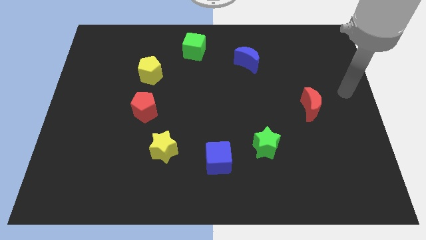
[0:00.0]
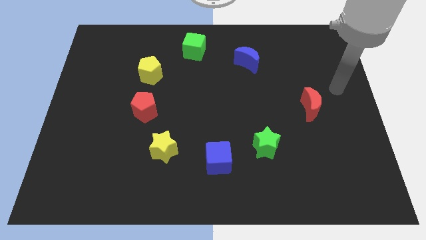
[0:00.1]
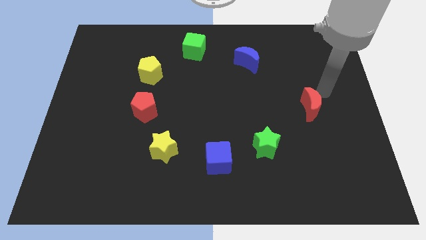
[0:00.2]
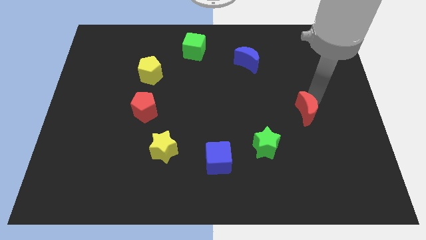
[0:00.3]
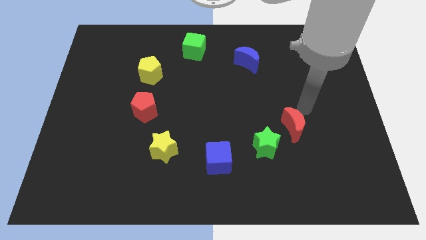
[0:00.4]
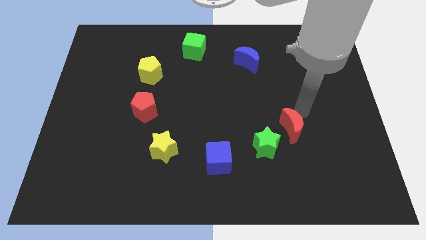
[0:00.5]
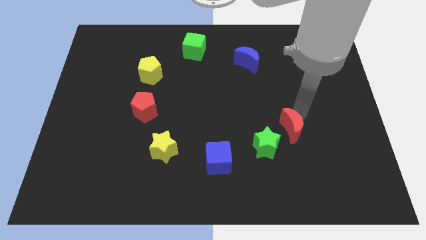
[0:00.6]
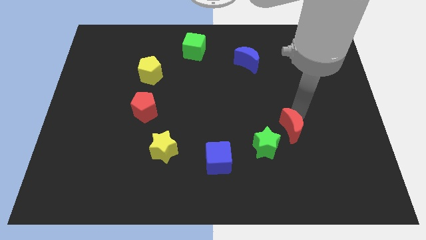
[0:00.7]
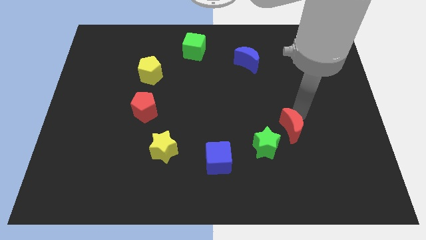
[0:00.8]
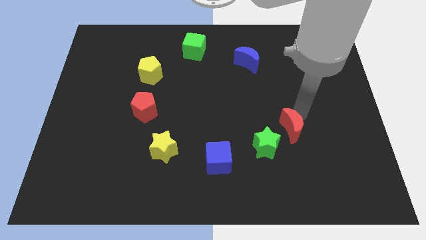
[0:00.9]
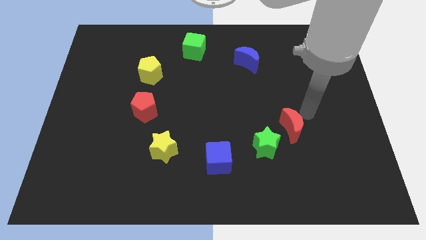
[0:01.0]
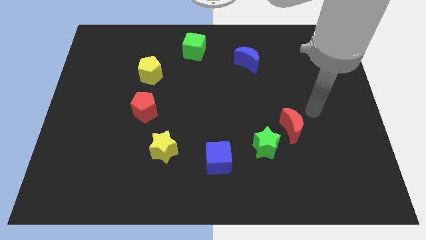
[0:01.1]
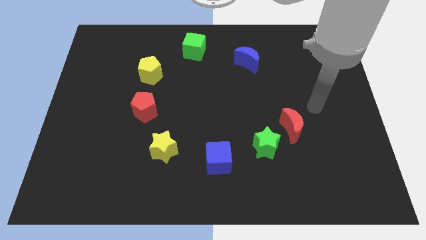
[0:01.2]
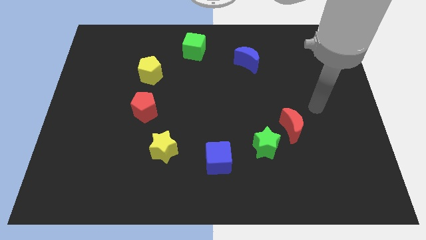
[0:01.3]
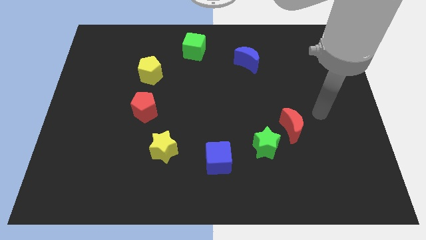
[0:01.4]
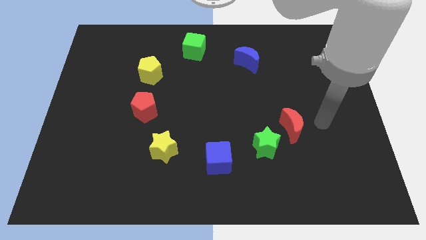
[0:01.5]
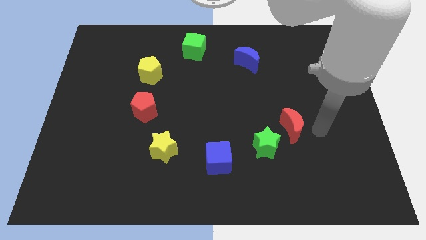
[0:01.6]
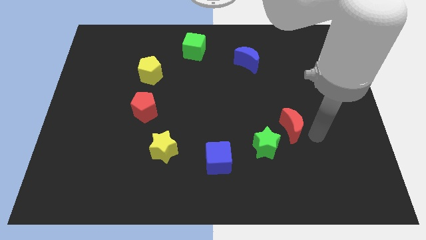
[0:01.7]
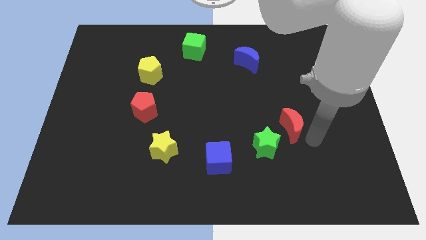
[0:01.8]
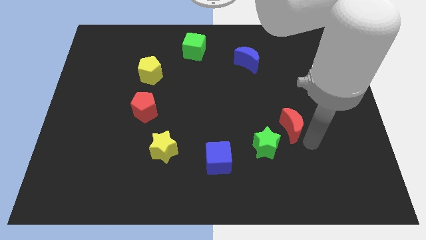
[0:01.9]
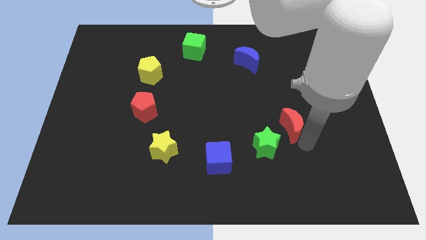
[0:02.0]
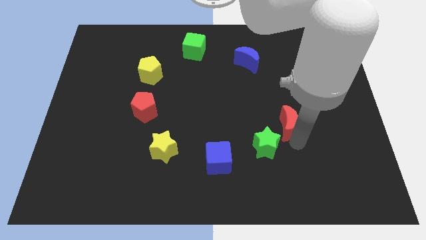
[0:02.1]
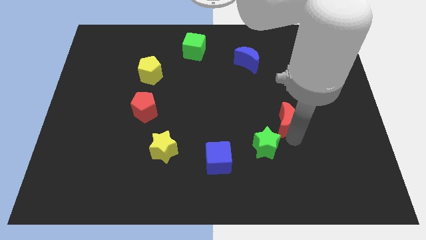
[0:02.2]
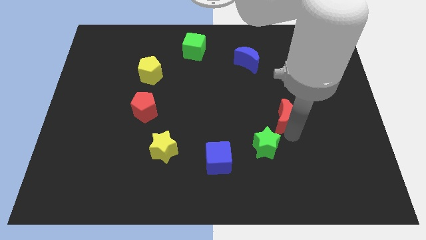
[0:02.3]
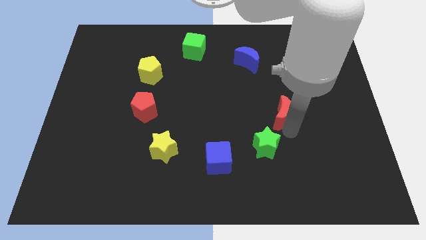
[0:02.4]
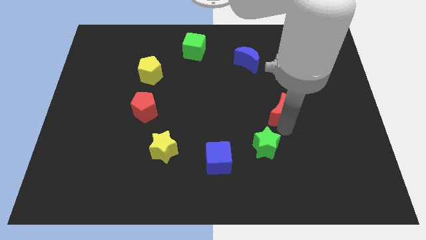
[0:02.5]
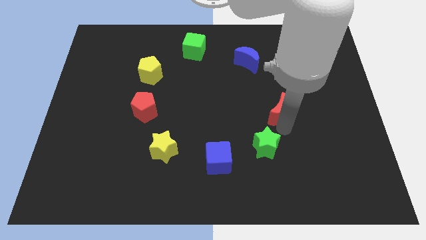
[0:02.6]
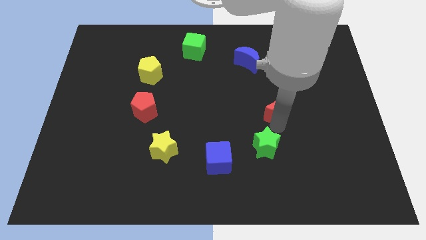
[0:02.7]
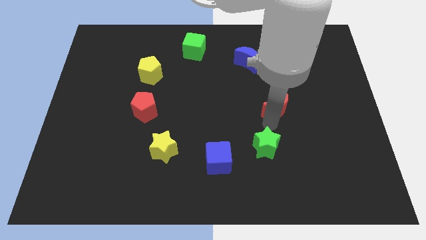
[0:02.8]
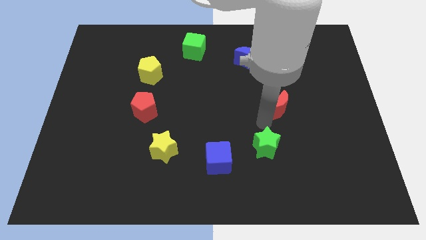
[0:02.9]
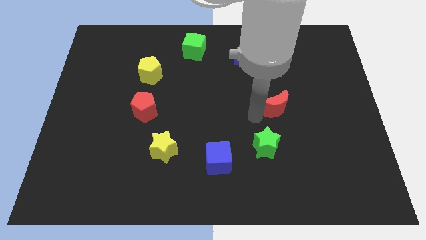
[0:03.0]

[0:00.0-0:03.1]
move the red moon to the top of green star

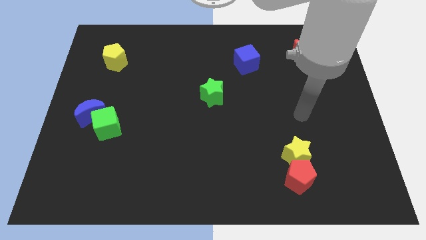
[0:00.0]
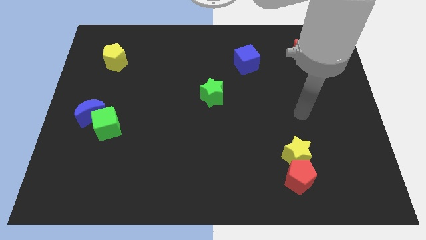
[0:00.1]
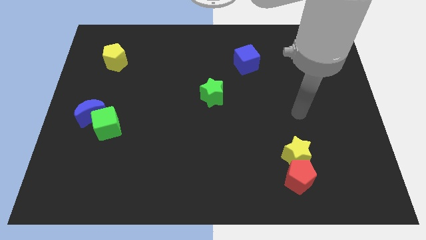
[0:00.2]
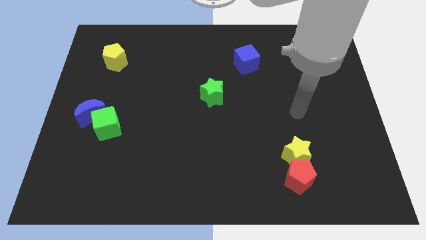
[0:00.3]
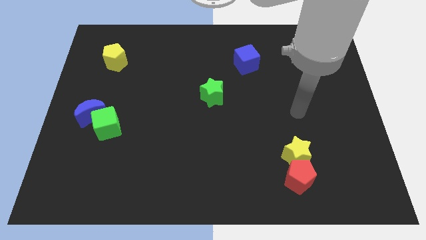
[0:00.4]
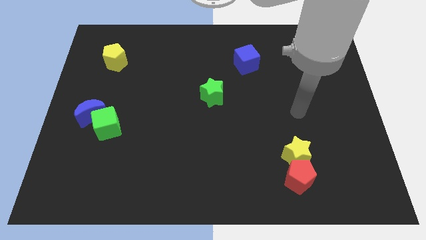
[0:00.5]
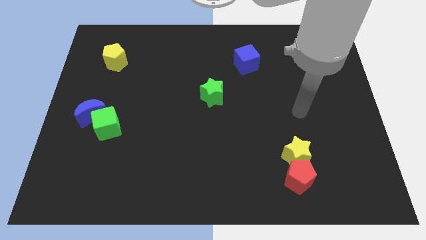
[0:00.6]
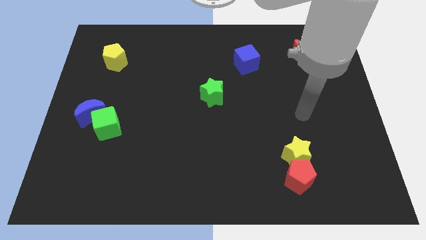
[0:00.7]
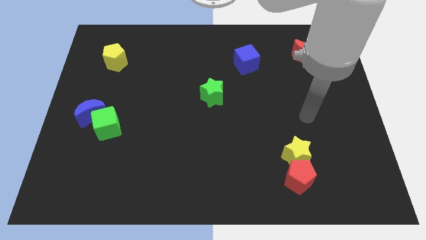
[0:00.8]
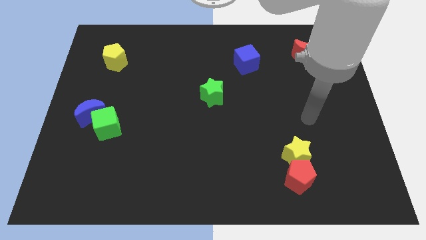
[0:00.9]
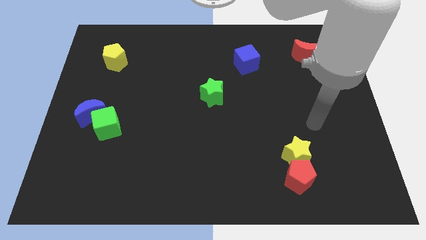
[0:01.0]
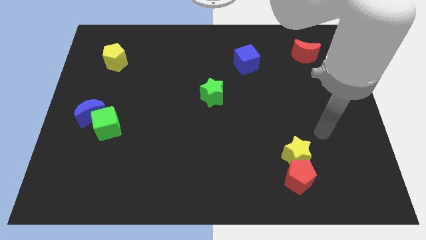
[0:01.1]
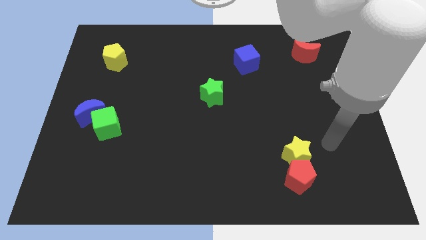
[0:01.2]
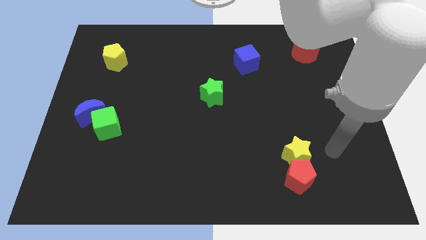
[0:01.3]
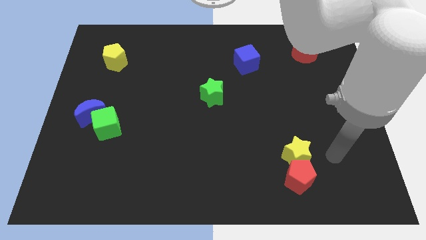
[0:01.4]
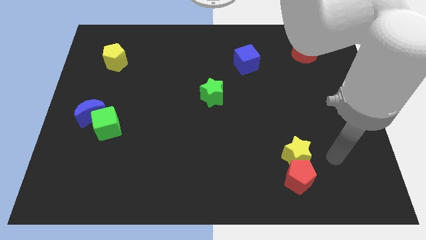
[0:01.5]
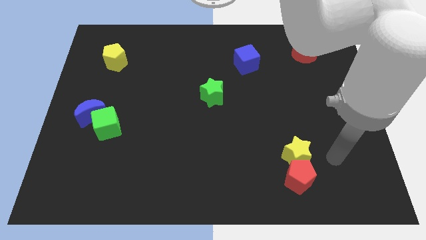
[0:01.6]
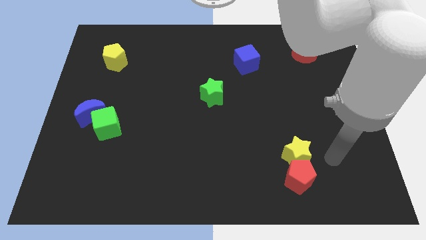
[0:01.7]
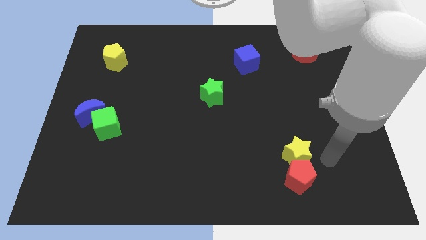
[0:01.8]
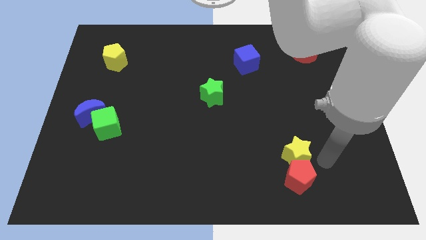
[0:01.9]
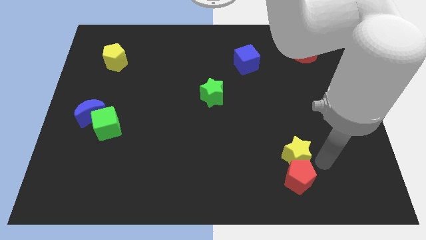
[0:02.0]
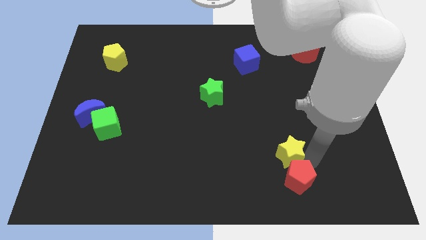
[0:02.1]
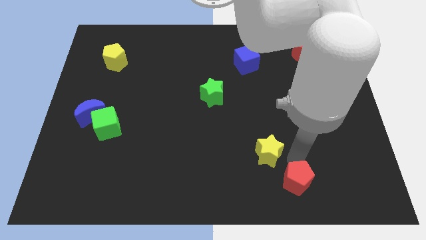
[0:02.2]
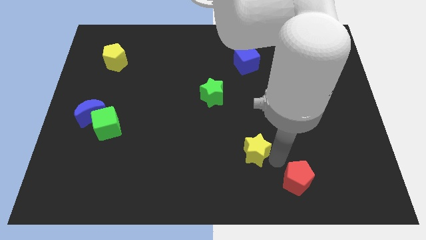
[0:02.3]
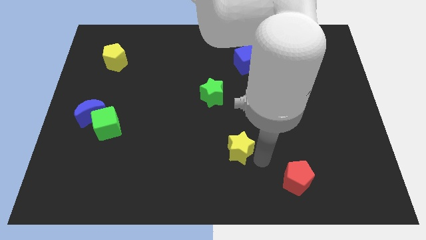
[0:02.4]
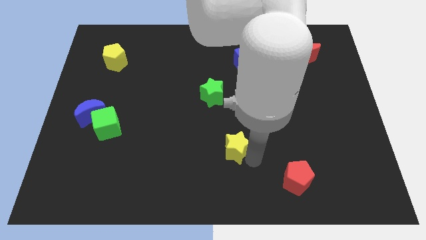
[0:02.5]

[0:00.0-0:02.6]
place the yellow star diagonally top left to the red pentagon

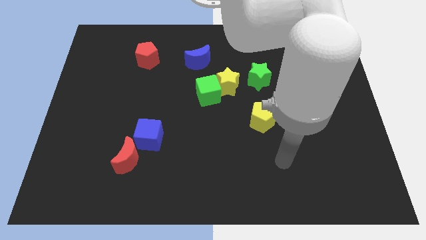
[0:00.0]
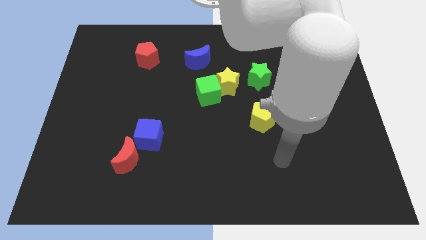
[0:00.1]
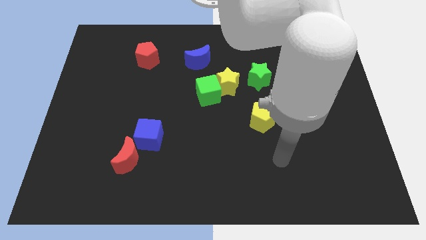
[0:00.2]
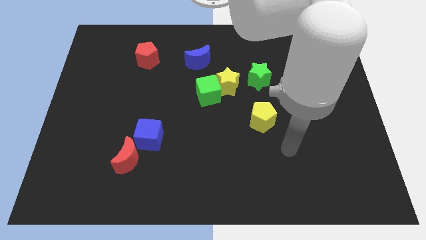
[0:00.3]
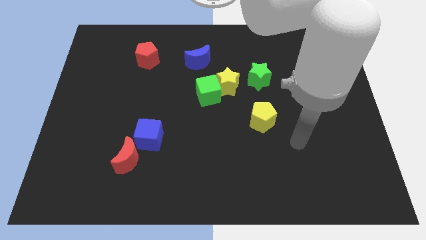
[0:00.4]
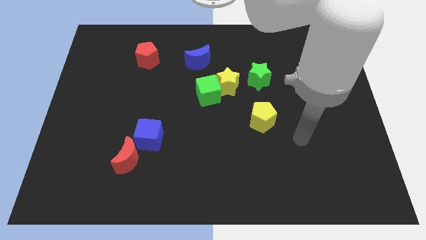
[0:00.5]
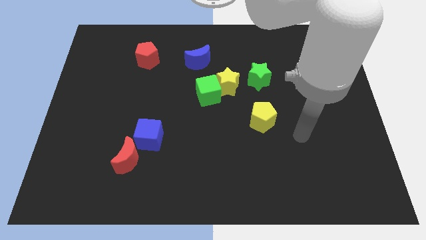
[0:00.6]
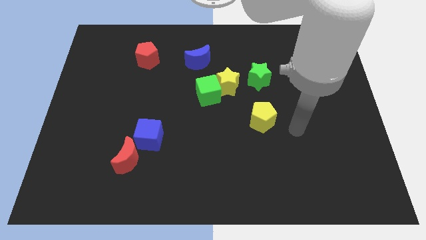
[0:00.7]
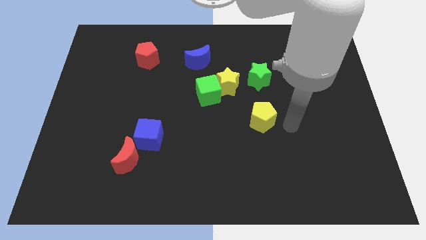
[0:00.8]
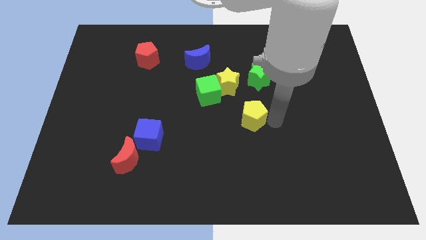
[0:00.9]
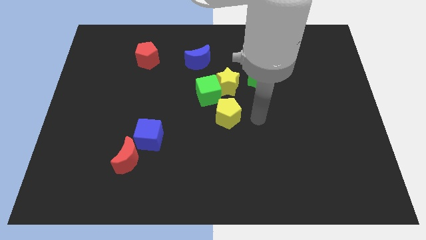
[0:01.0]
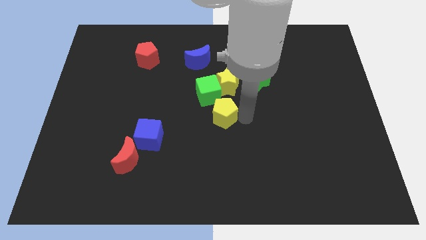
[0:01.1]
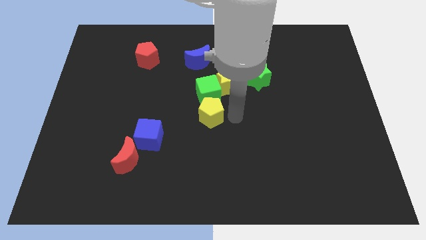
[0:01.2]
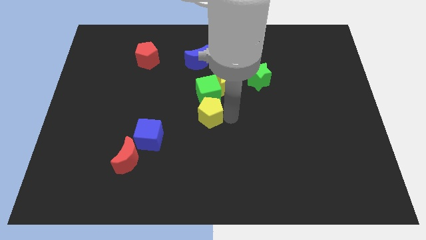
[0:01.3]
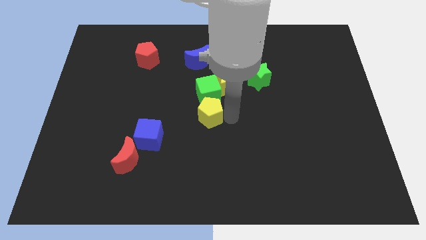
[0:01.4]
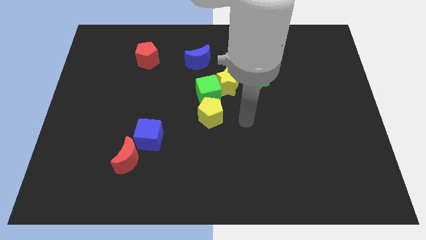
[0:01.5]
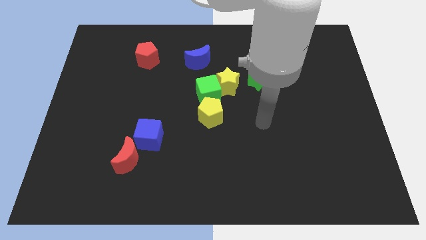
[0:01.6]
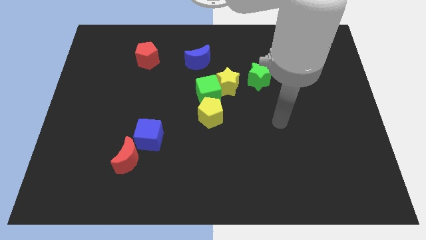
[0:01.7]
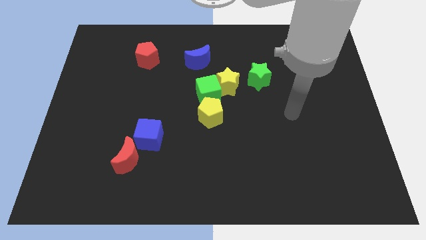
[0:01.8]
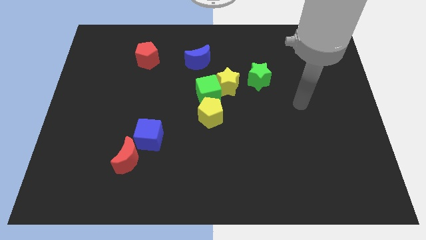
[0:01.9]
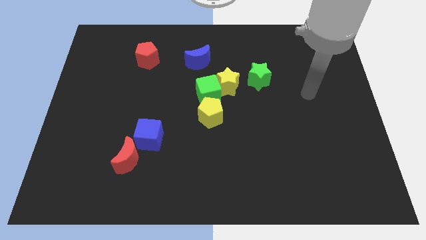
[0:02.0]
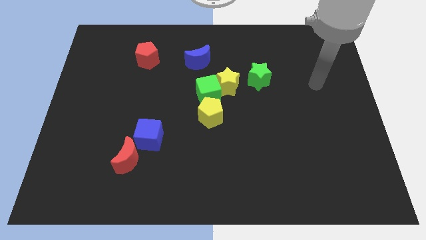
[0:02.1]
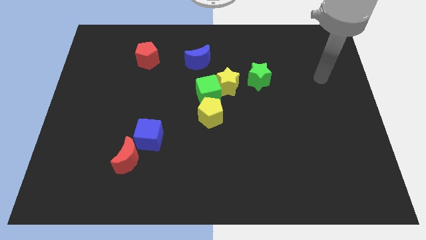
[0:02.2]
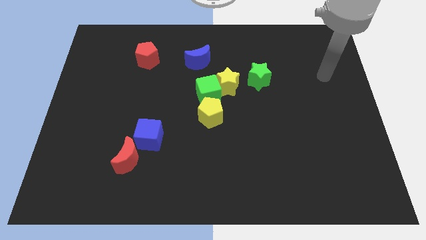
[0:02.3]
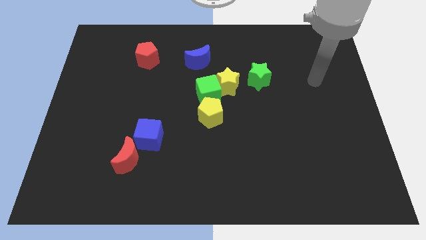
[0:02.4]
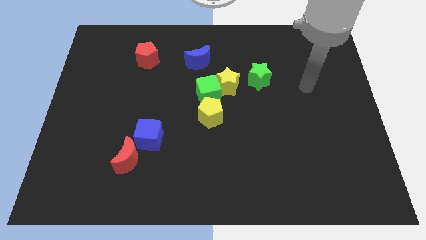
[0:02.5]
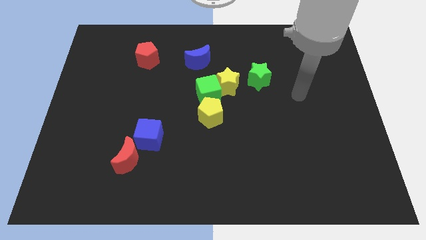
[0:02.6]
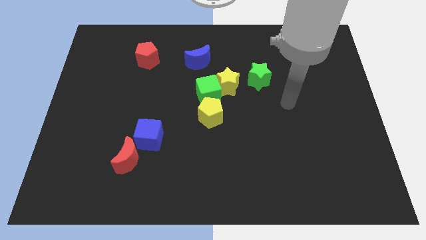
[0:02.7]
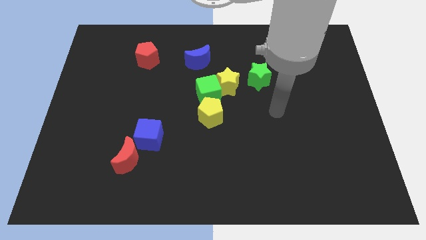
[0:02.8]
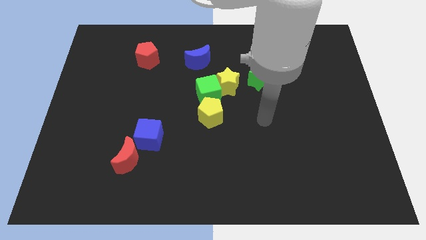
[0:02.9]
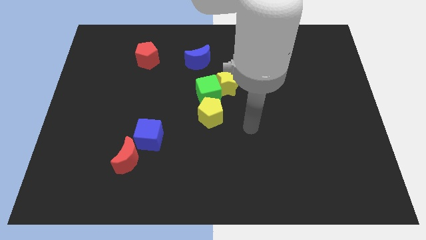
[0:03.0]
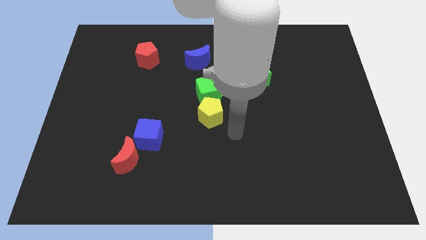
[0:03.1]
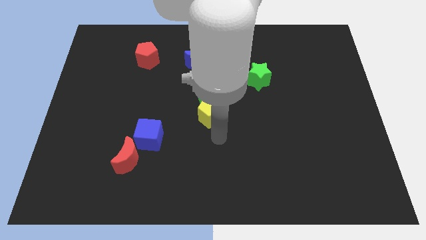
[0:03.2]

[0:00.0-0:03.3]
place yellow pentagon below green cube
